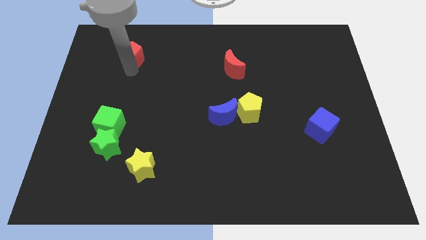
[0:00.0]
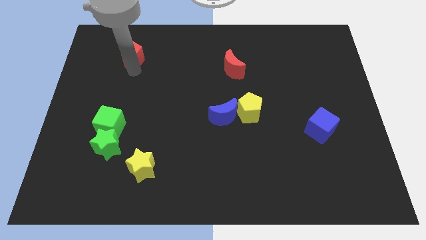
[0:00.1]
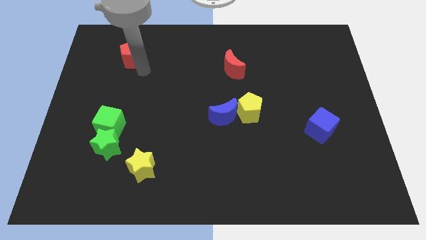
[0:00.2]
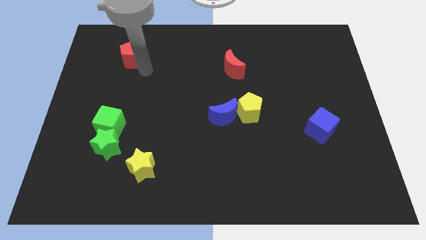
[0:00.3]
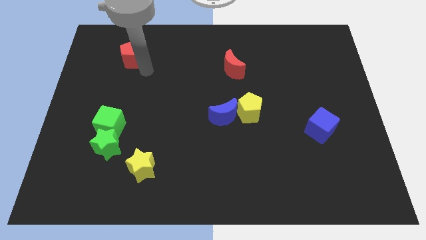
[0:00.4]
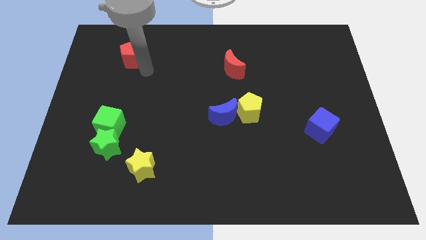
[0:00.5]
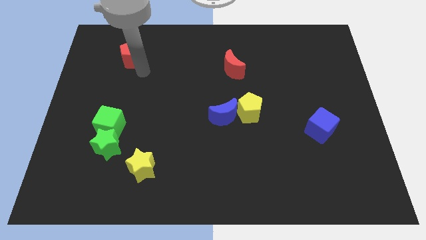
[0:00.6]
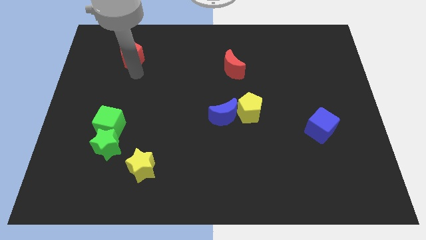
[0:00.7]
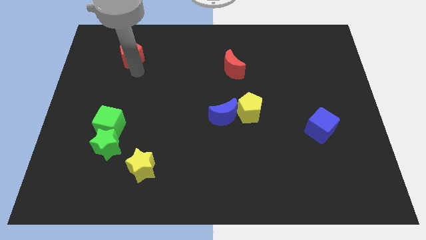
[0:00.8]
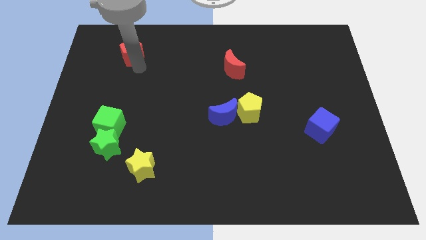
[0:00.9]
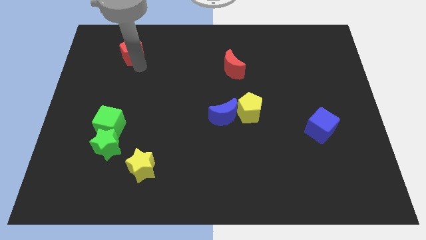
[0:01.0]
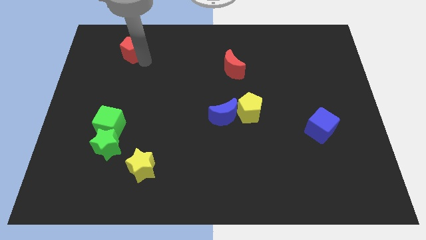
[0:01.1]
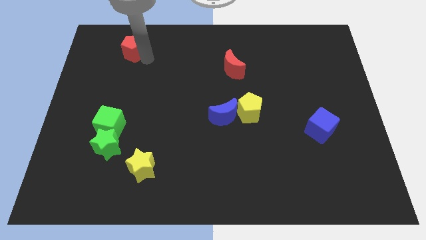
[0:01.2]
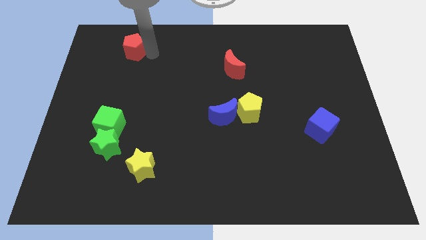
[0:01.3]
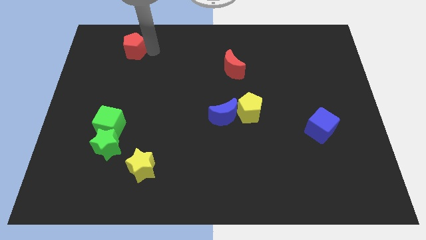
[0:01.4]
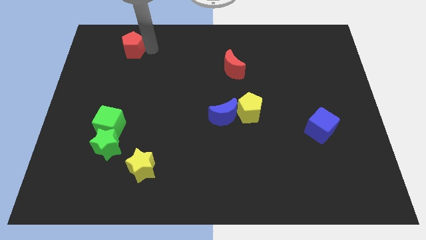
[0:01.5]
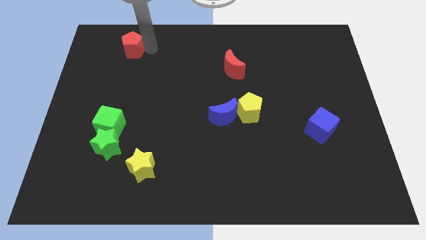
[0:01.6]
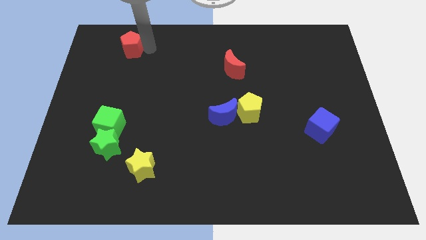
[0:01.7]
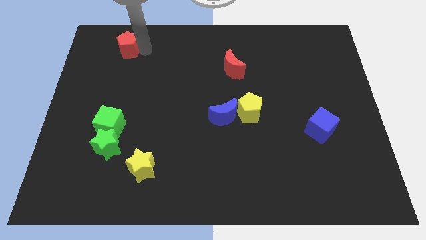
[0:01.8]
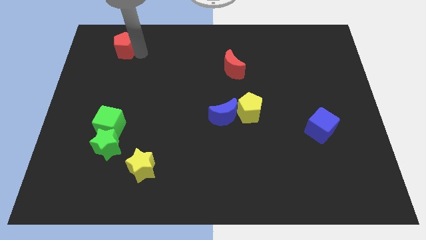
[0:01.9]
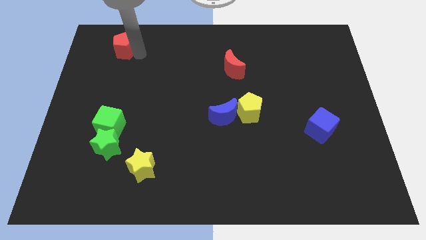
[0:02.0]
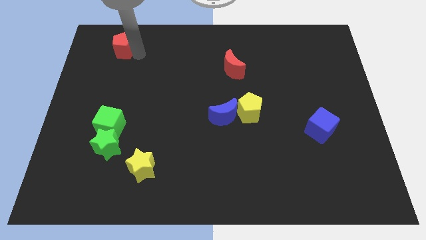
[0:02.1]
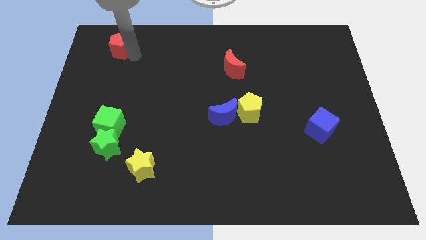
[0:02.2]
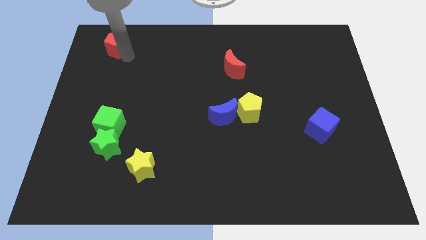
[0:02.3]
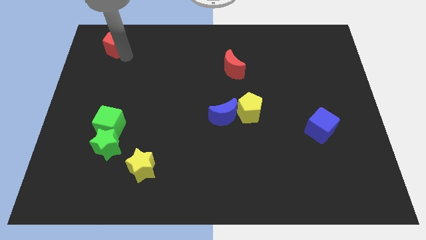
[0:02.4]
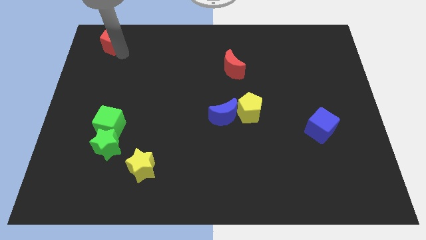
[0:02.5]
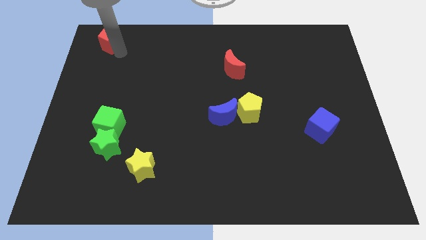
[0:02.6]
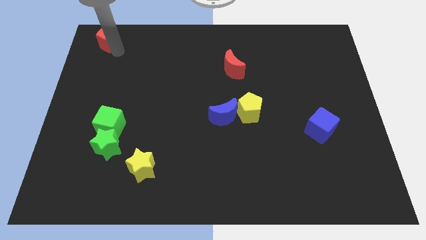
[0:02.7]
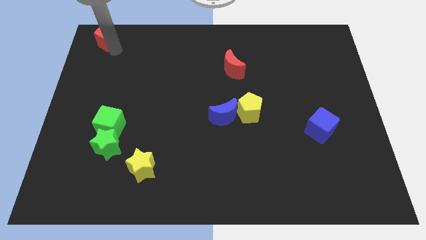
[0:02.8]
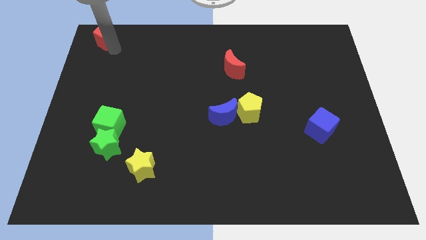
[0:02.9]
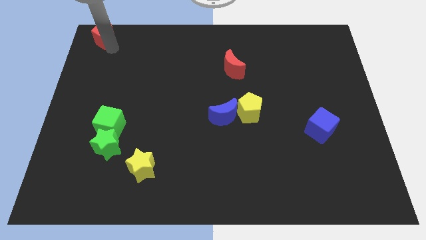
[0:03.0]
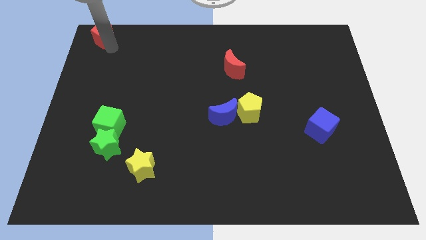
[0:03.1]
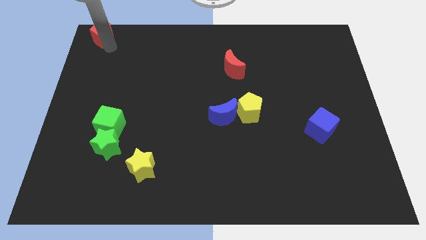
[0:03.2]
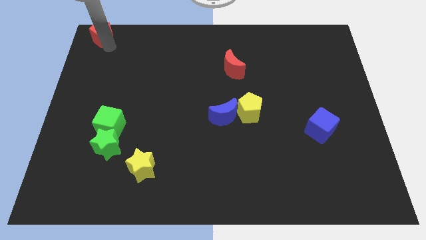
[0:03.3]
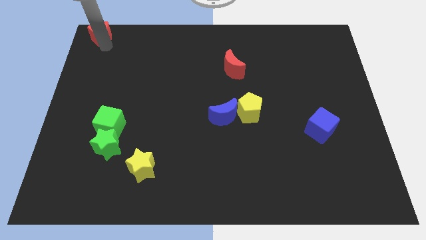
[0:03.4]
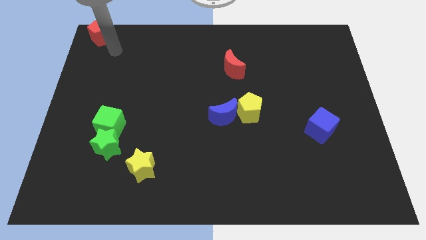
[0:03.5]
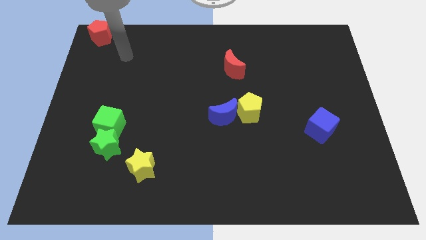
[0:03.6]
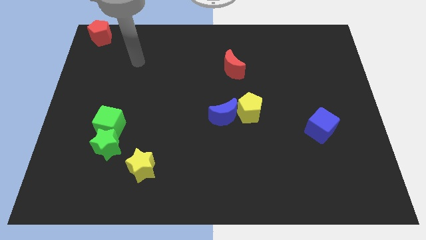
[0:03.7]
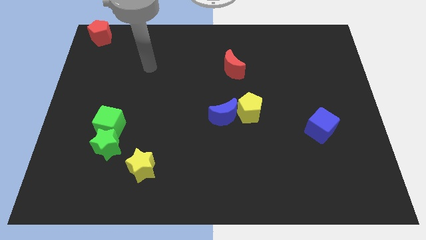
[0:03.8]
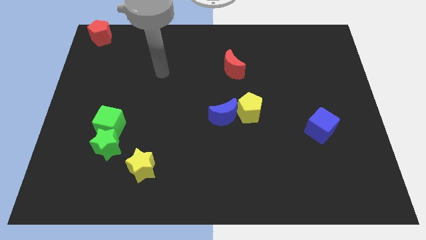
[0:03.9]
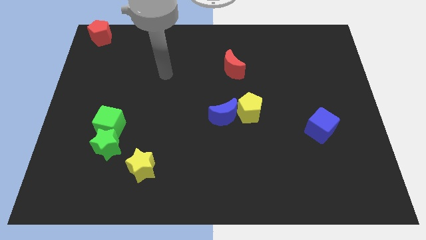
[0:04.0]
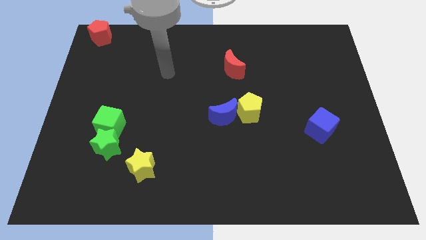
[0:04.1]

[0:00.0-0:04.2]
place the red pentagon to the top left corner

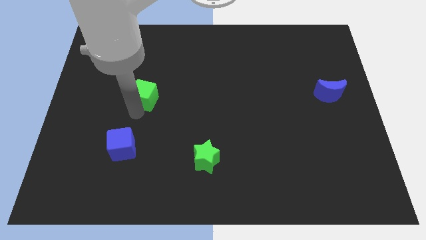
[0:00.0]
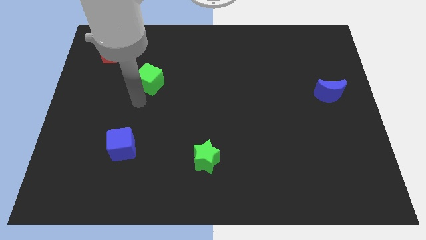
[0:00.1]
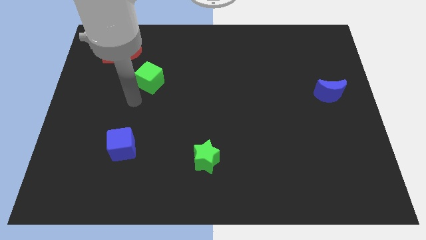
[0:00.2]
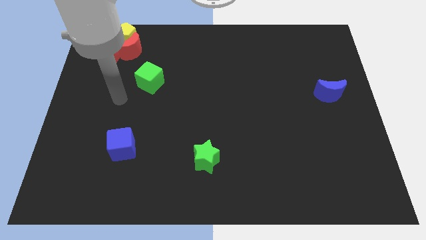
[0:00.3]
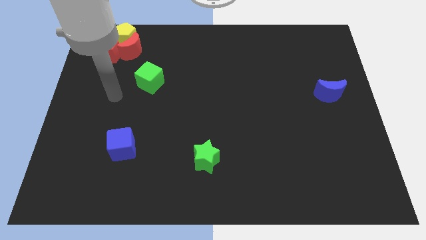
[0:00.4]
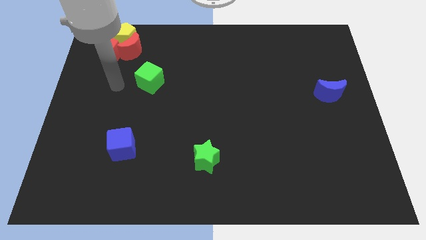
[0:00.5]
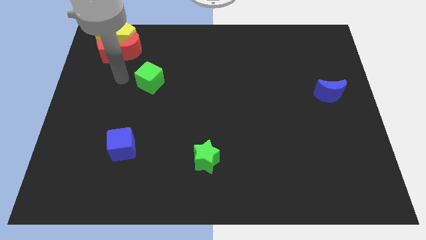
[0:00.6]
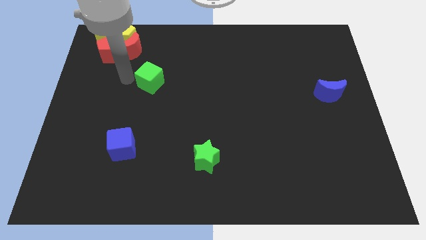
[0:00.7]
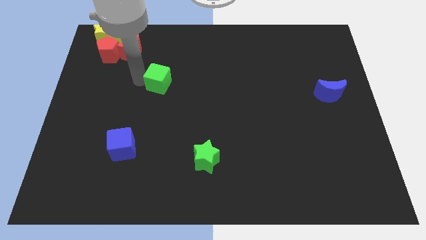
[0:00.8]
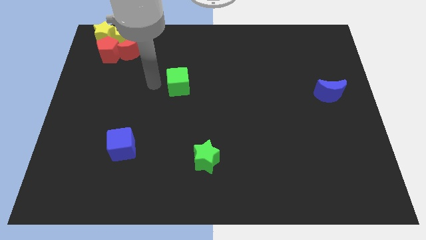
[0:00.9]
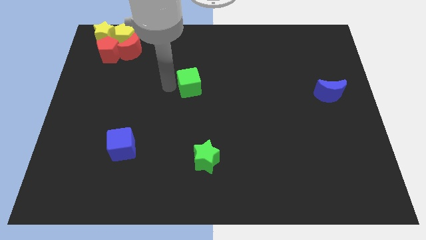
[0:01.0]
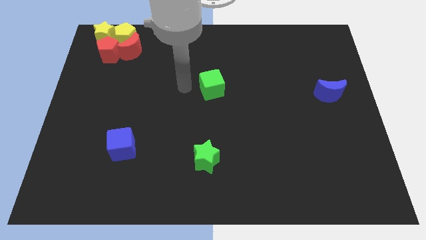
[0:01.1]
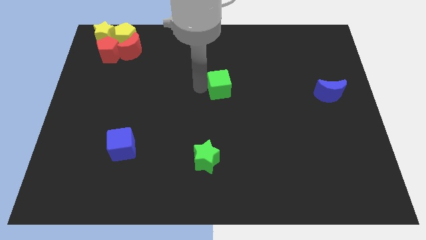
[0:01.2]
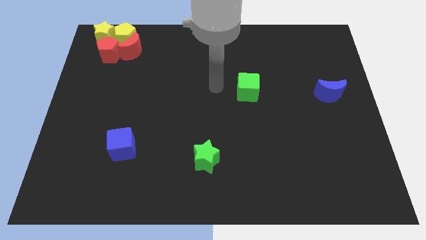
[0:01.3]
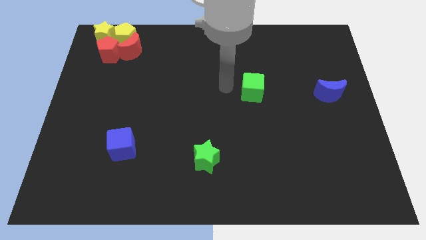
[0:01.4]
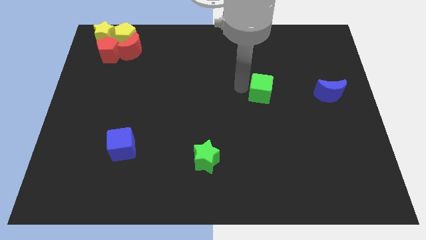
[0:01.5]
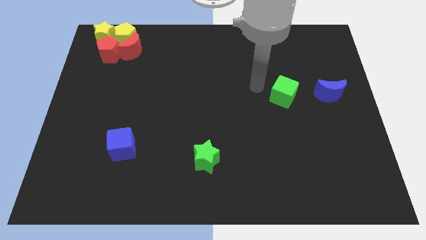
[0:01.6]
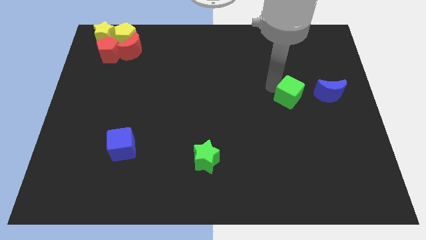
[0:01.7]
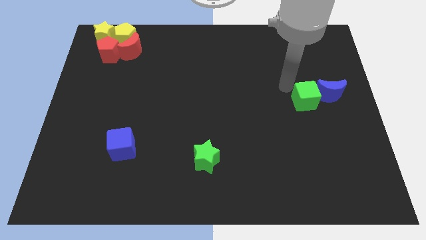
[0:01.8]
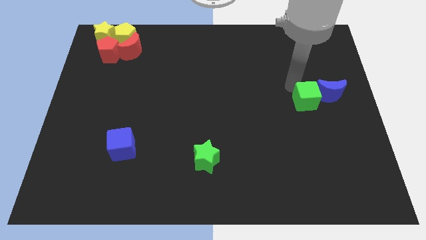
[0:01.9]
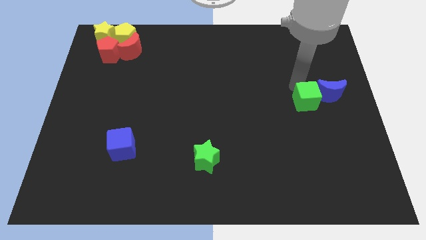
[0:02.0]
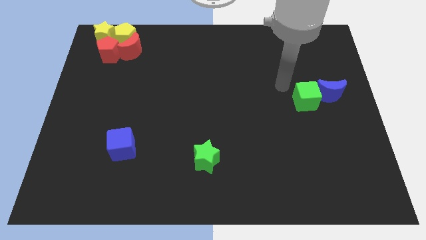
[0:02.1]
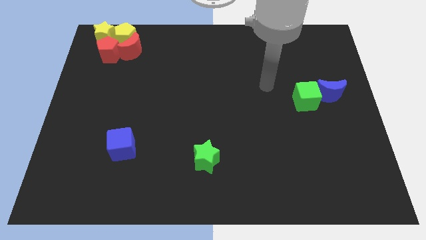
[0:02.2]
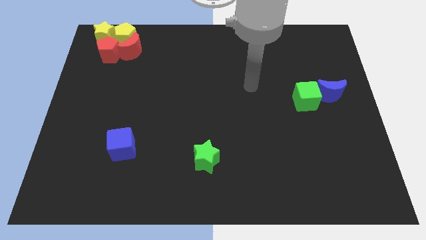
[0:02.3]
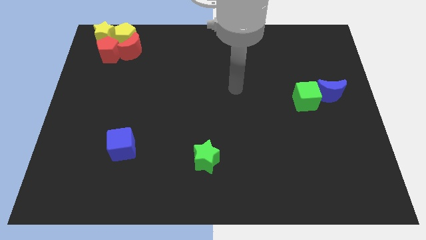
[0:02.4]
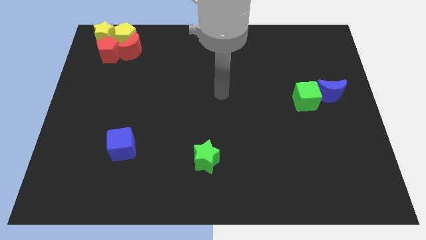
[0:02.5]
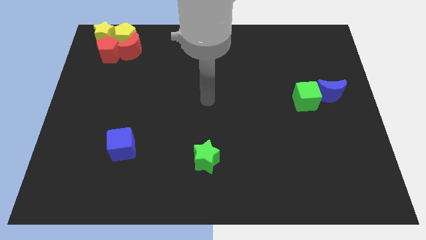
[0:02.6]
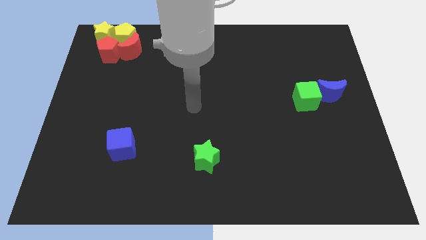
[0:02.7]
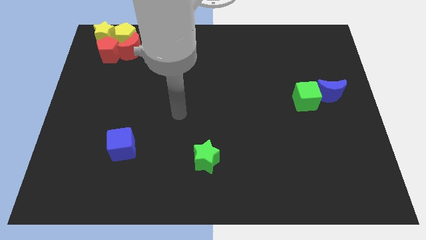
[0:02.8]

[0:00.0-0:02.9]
place the green cube to the left of blue crescent

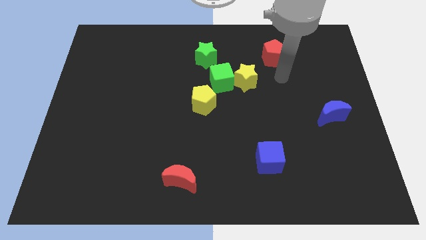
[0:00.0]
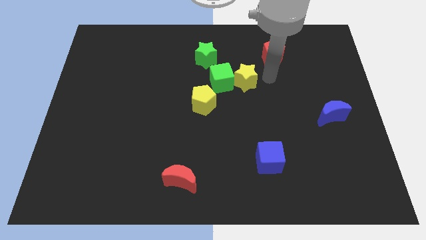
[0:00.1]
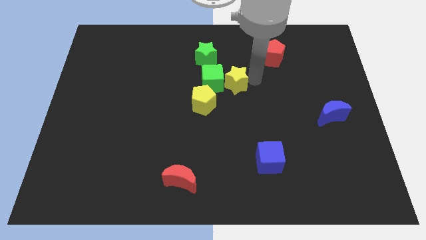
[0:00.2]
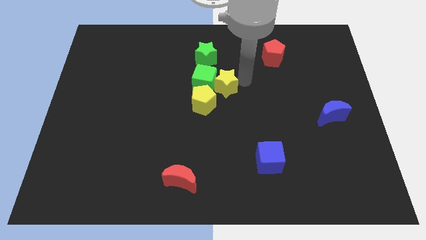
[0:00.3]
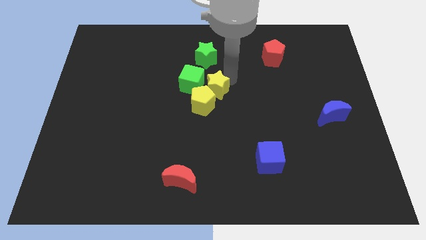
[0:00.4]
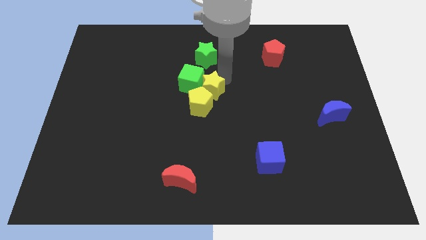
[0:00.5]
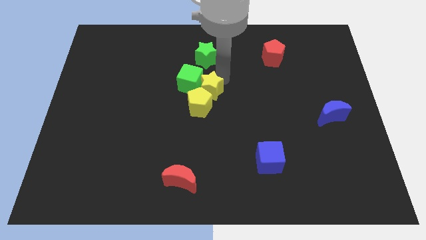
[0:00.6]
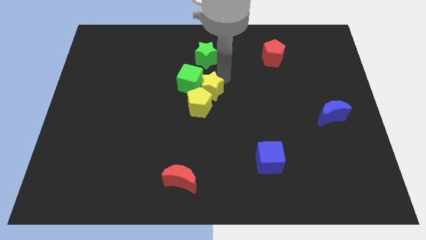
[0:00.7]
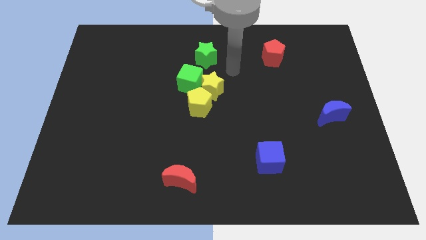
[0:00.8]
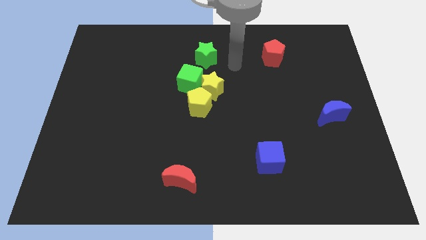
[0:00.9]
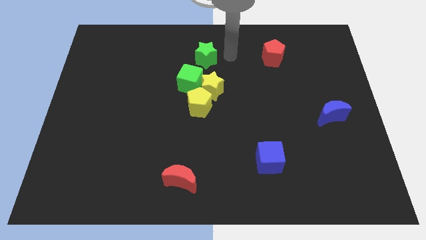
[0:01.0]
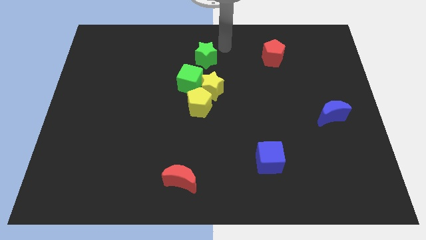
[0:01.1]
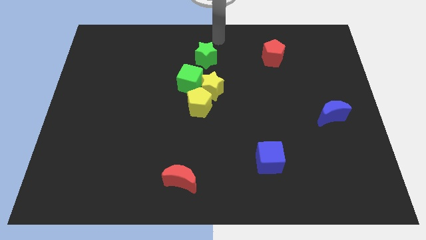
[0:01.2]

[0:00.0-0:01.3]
move the yellow star and green cube towards the left

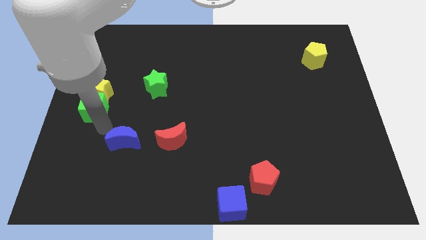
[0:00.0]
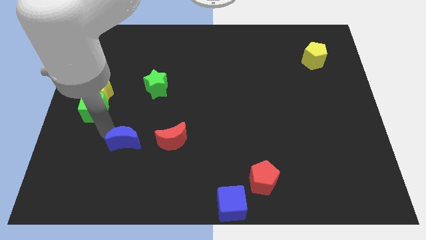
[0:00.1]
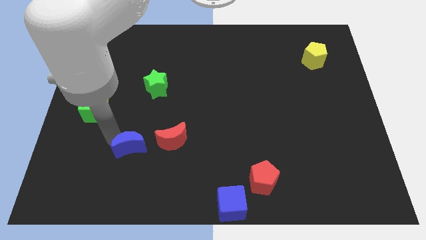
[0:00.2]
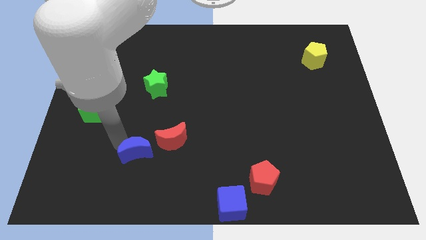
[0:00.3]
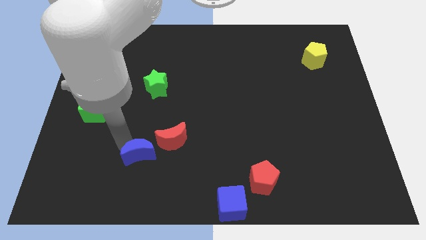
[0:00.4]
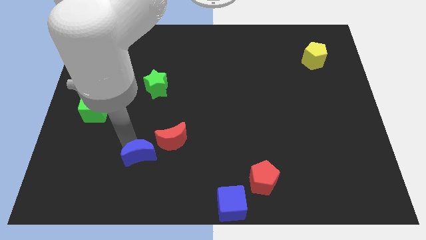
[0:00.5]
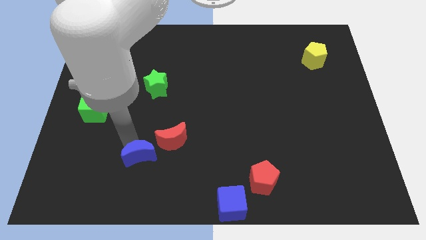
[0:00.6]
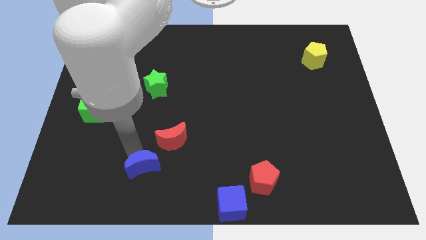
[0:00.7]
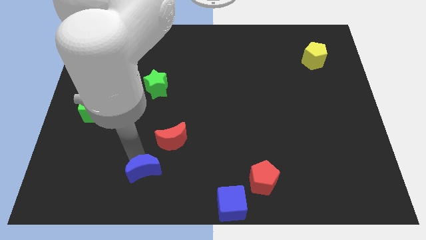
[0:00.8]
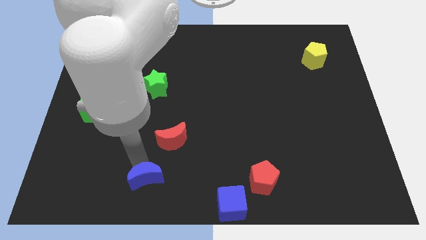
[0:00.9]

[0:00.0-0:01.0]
place the blue crescent to the left of the red crescent
